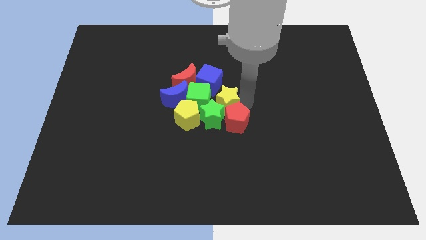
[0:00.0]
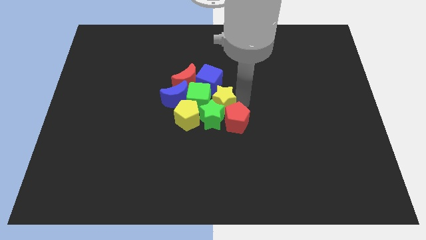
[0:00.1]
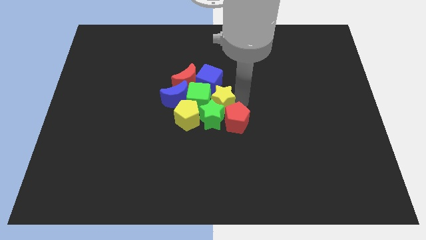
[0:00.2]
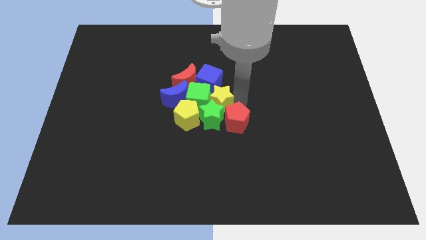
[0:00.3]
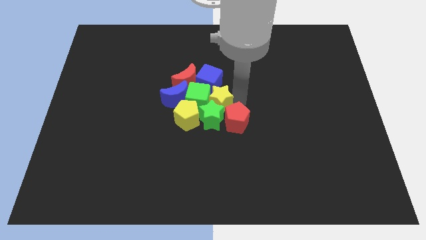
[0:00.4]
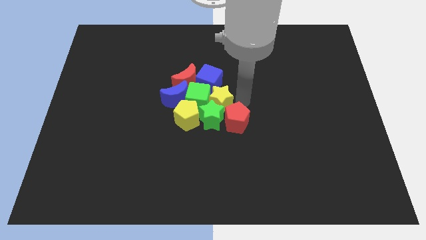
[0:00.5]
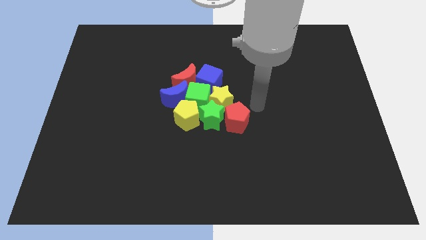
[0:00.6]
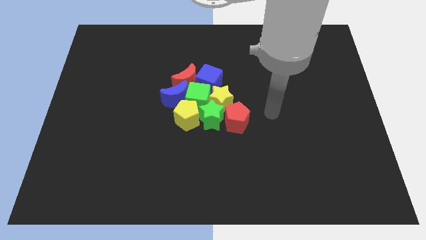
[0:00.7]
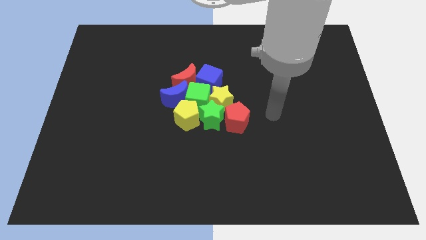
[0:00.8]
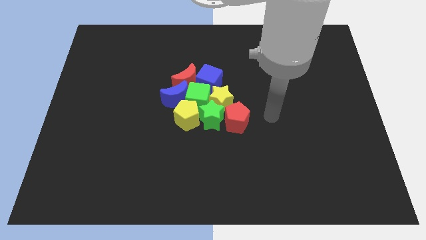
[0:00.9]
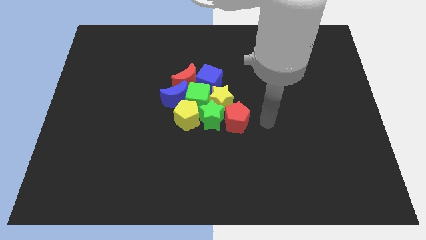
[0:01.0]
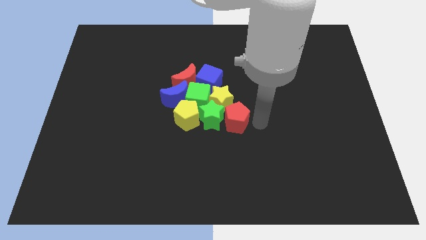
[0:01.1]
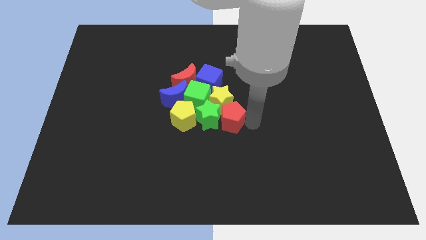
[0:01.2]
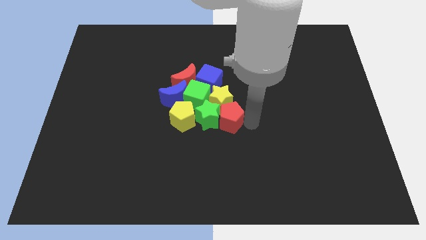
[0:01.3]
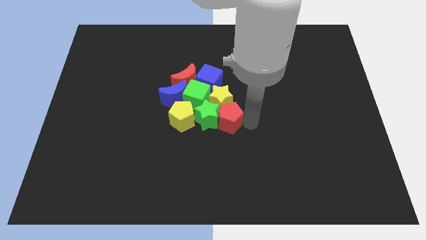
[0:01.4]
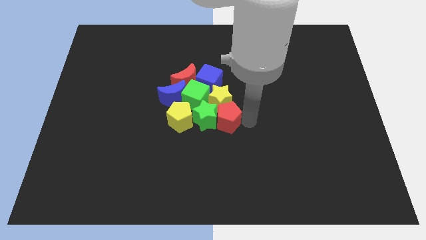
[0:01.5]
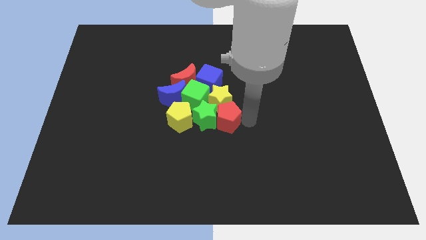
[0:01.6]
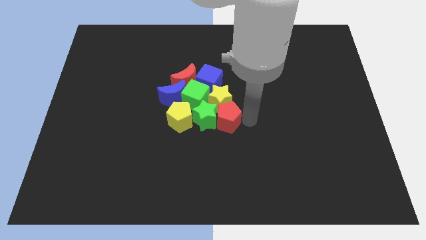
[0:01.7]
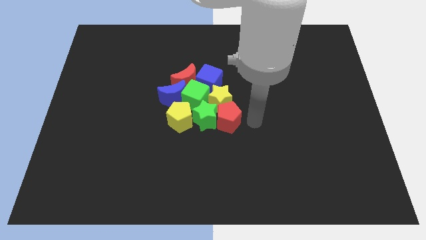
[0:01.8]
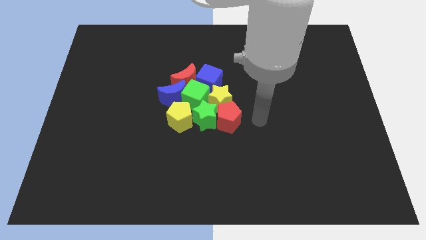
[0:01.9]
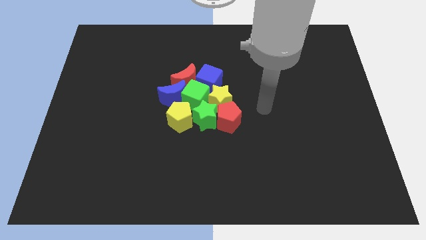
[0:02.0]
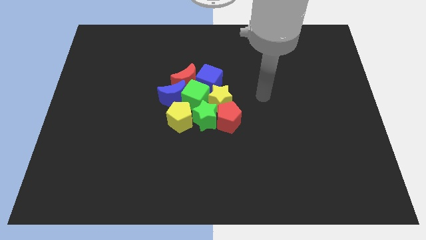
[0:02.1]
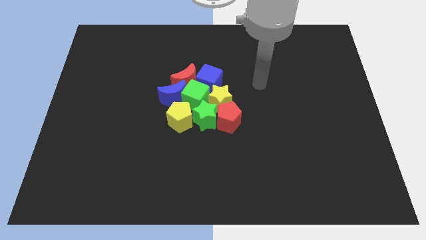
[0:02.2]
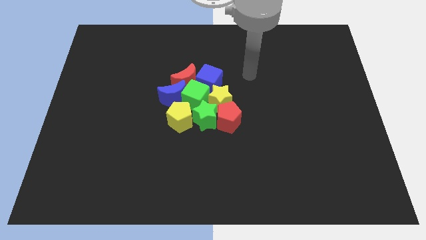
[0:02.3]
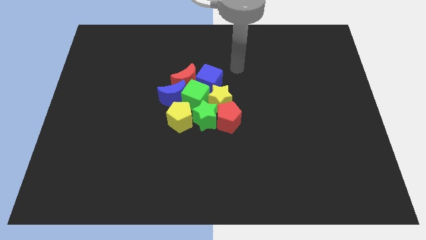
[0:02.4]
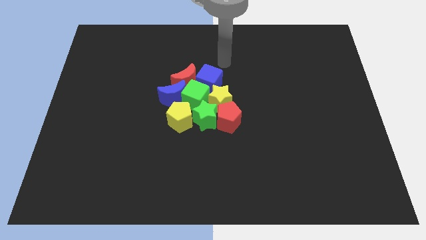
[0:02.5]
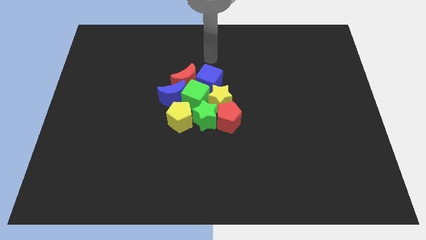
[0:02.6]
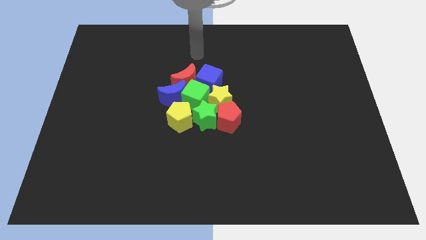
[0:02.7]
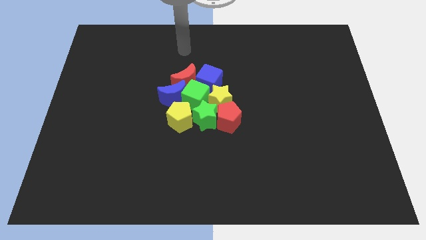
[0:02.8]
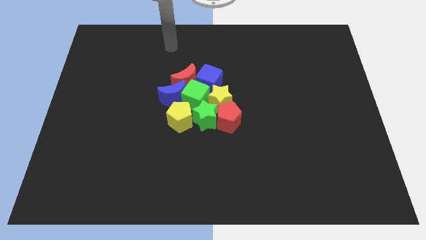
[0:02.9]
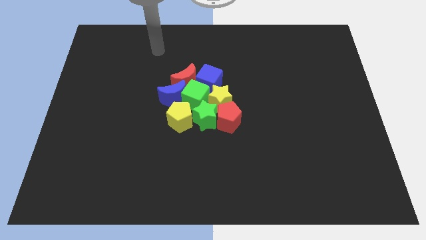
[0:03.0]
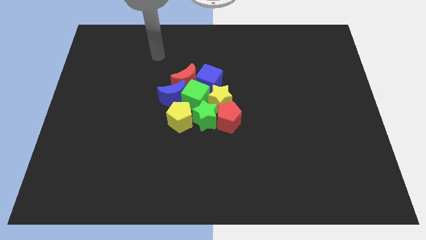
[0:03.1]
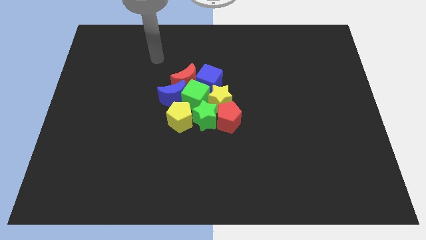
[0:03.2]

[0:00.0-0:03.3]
push the red pentagon slightly to the left

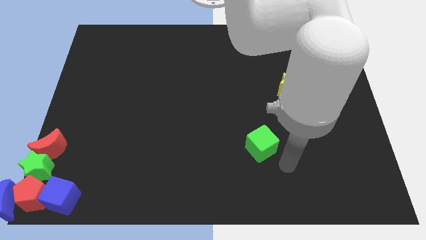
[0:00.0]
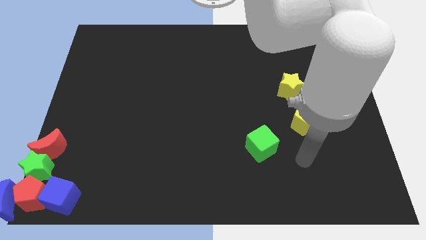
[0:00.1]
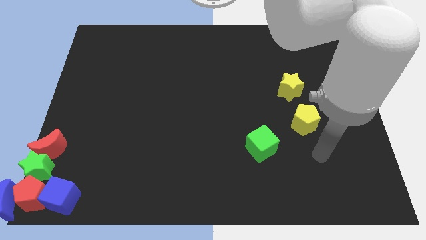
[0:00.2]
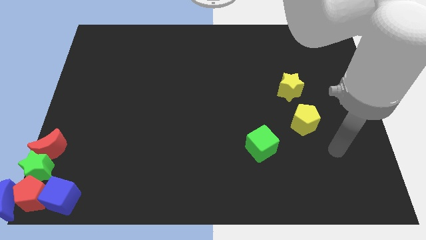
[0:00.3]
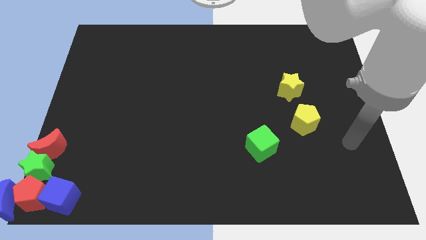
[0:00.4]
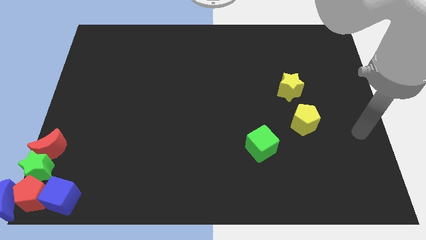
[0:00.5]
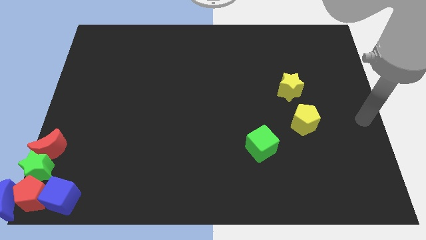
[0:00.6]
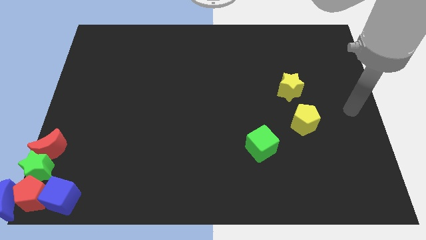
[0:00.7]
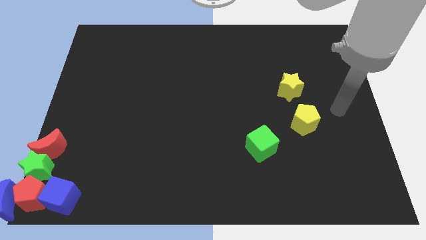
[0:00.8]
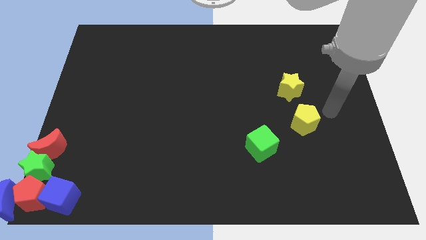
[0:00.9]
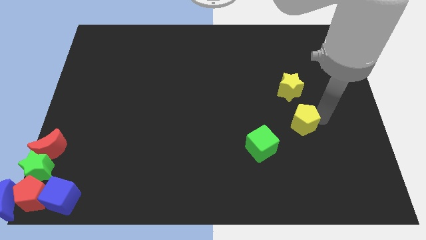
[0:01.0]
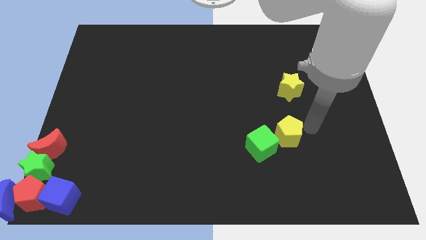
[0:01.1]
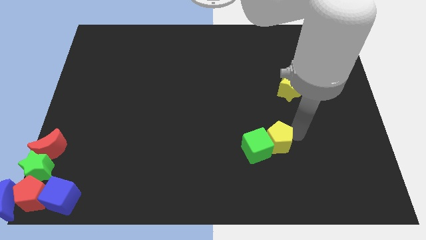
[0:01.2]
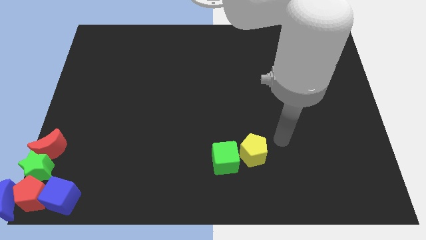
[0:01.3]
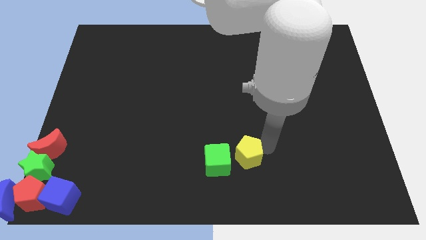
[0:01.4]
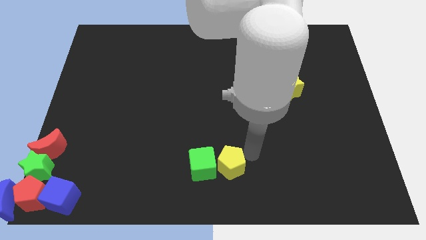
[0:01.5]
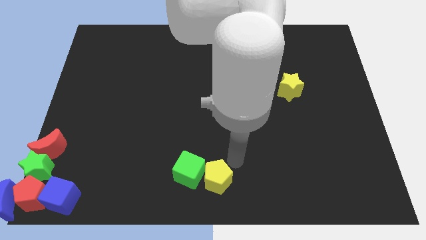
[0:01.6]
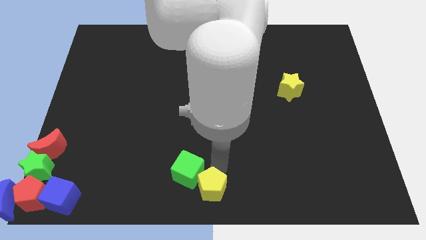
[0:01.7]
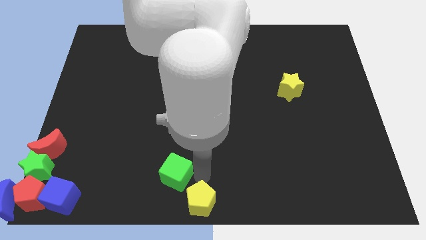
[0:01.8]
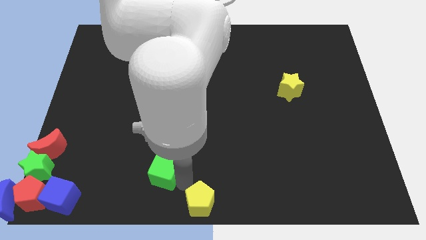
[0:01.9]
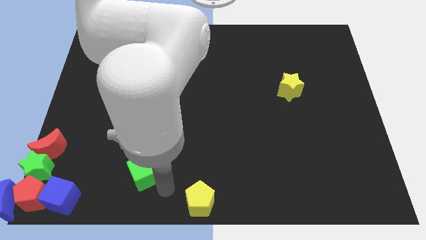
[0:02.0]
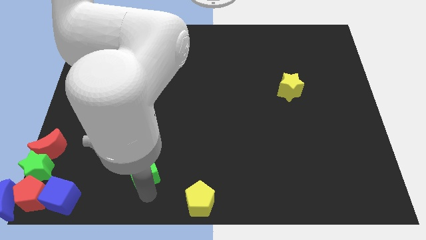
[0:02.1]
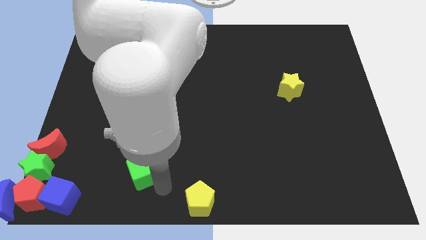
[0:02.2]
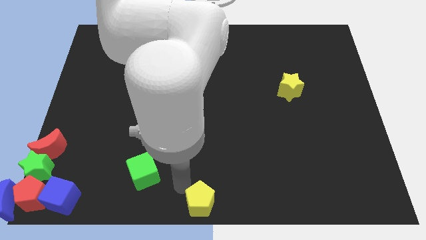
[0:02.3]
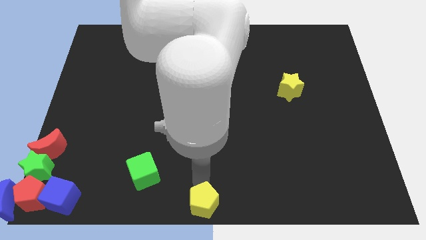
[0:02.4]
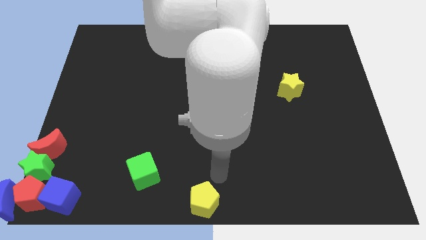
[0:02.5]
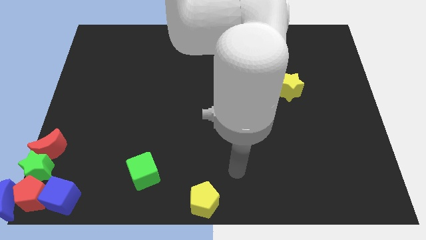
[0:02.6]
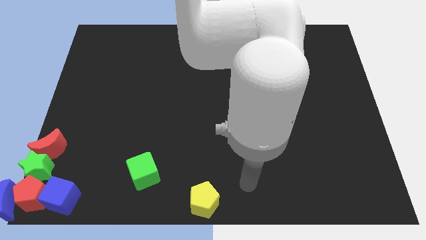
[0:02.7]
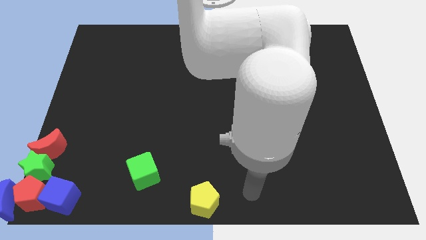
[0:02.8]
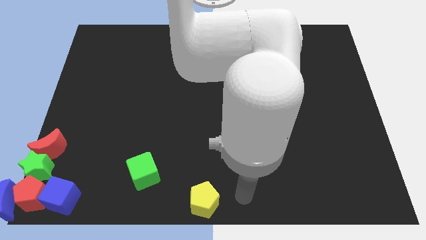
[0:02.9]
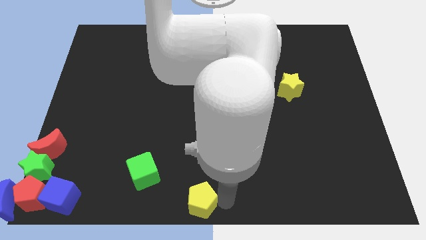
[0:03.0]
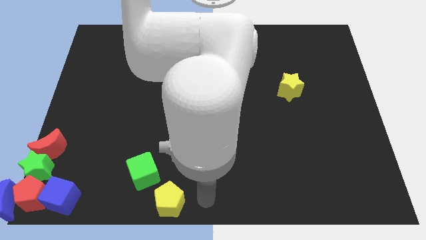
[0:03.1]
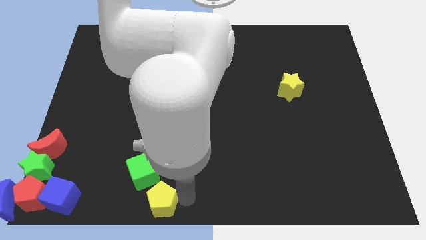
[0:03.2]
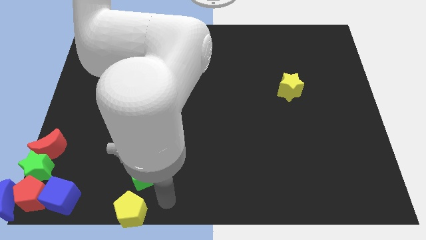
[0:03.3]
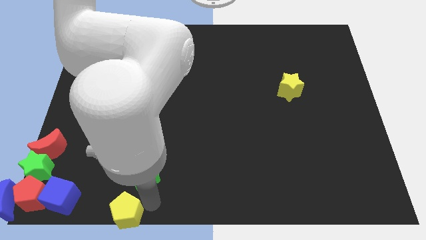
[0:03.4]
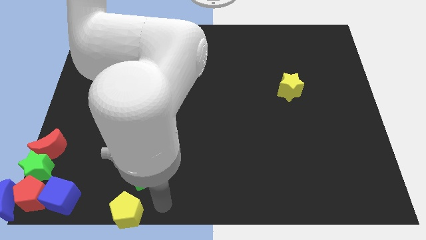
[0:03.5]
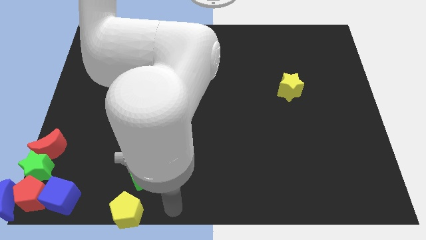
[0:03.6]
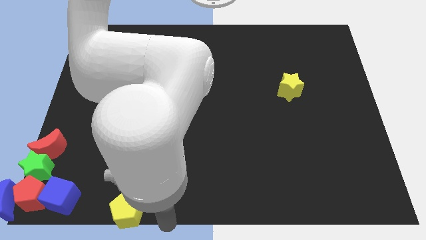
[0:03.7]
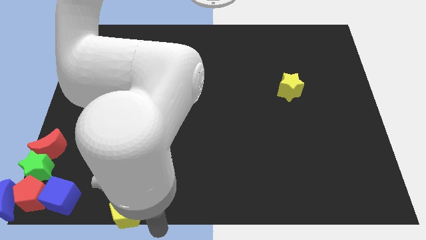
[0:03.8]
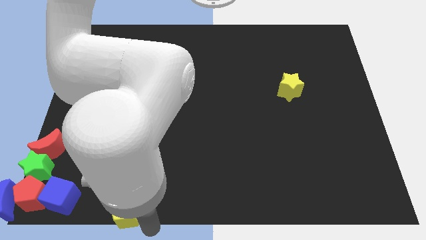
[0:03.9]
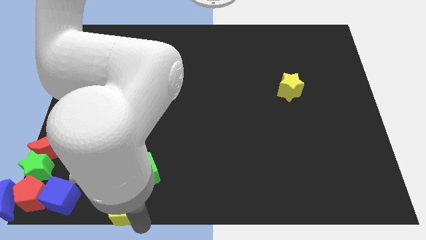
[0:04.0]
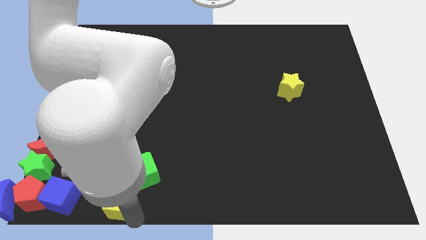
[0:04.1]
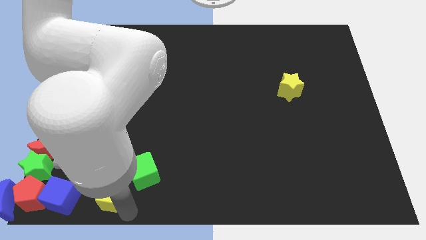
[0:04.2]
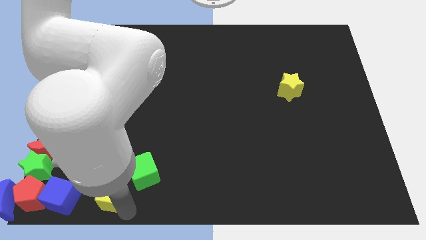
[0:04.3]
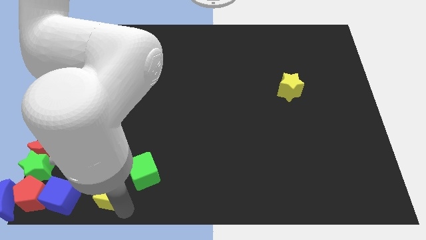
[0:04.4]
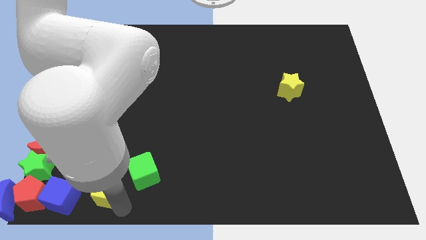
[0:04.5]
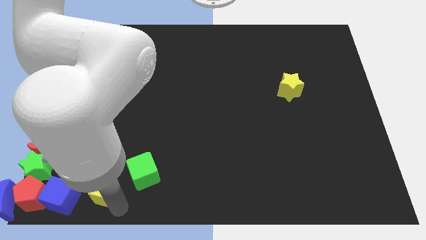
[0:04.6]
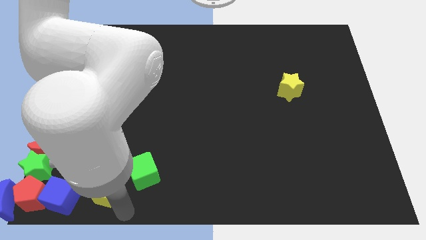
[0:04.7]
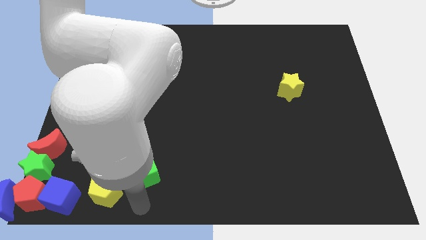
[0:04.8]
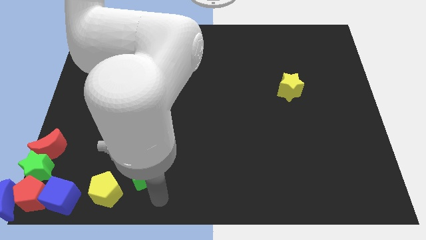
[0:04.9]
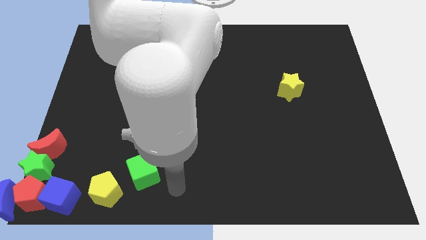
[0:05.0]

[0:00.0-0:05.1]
put the yellow pentagon in between the green cube and blue cube

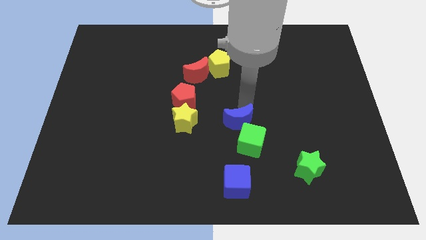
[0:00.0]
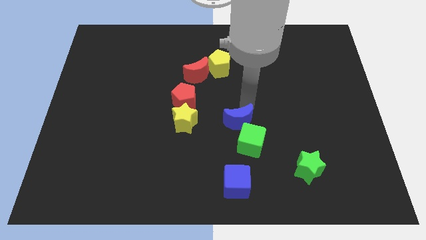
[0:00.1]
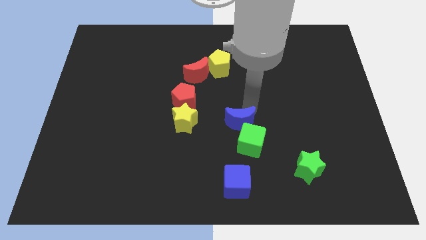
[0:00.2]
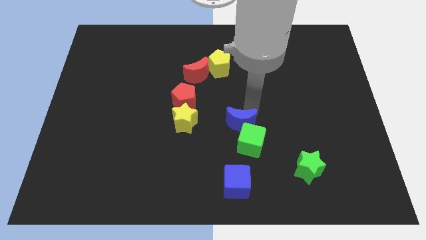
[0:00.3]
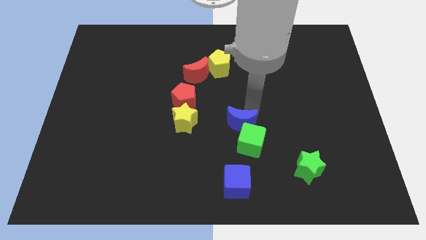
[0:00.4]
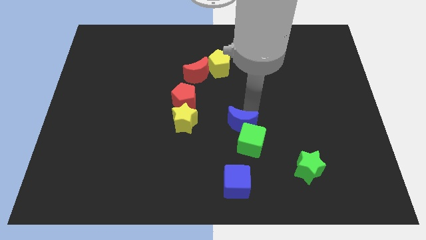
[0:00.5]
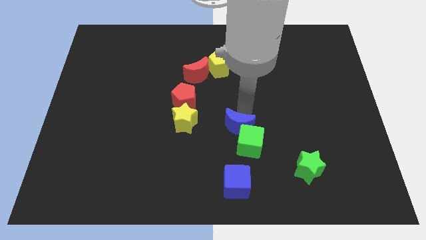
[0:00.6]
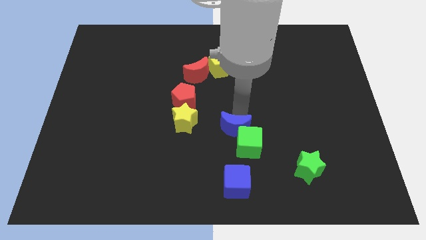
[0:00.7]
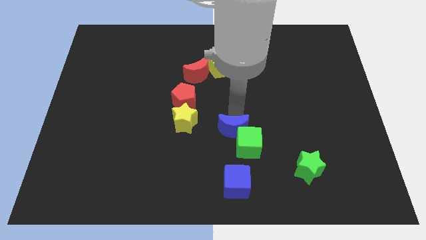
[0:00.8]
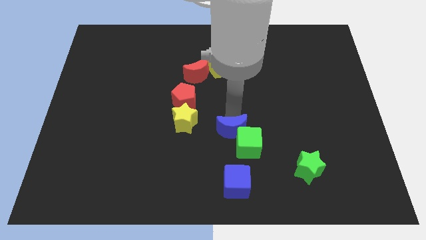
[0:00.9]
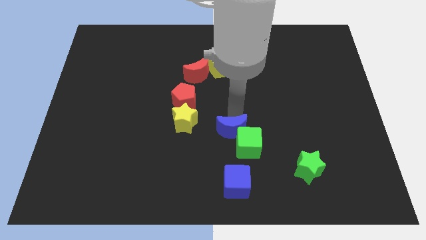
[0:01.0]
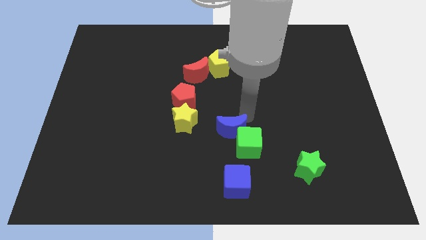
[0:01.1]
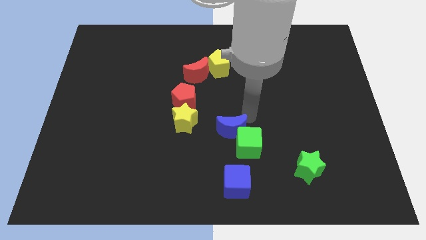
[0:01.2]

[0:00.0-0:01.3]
move the blue crescent into the top left of the green cube
